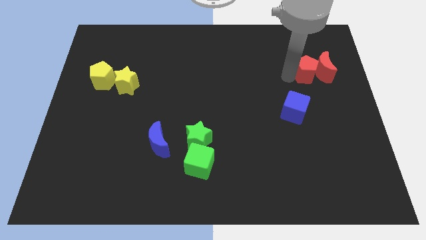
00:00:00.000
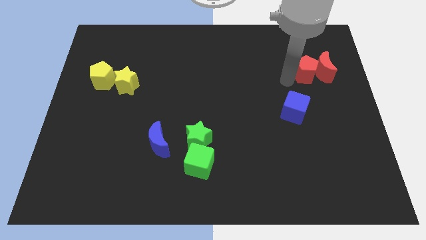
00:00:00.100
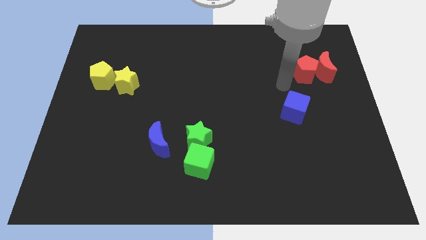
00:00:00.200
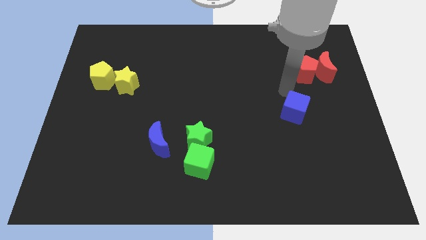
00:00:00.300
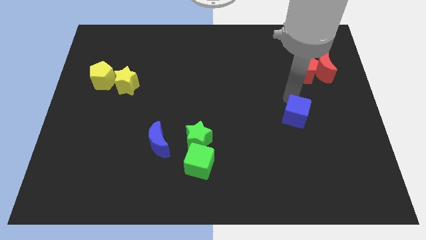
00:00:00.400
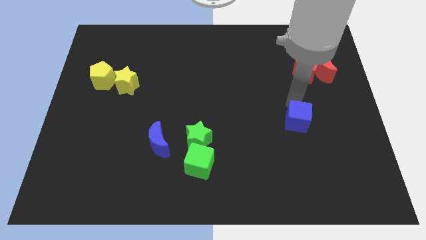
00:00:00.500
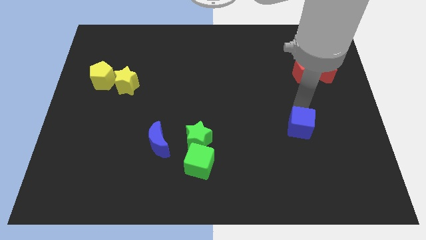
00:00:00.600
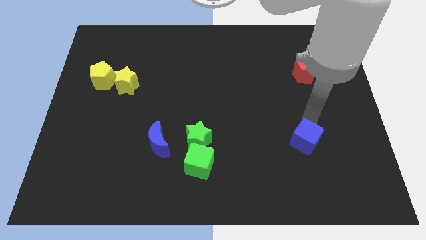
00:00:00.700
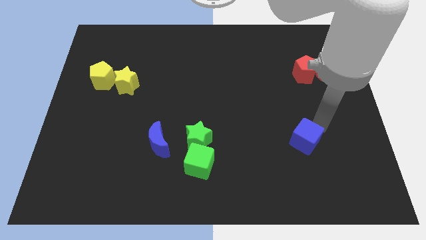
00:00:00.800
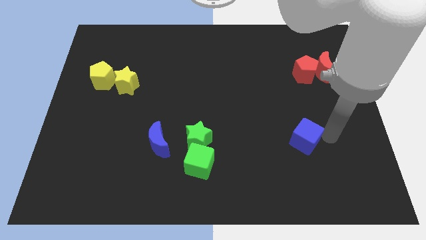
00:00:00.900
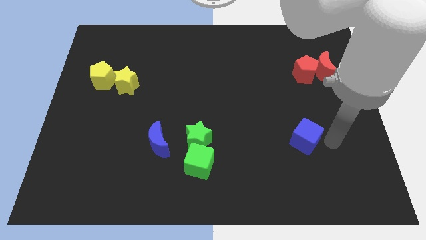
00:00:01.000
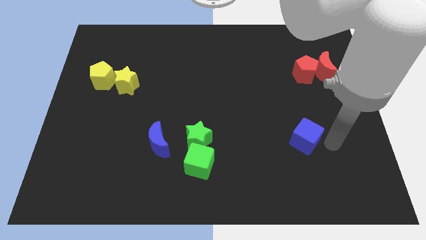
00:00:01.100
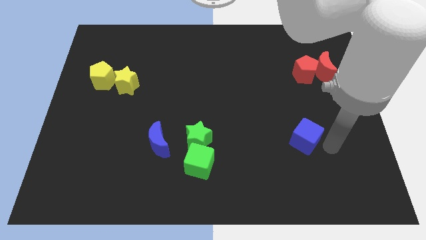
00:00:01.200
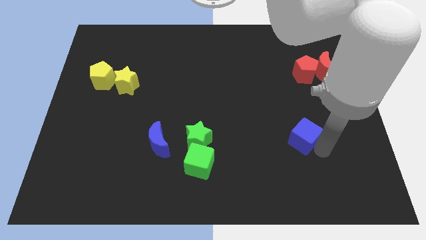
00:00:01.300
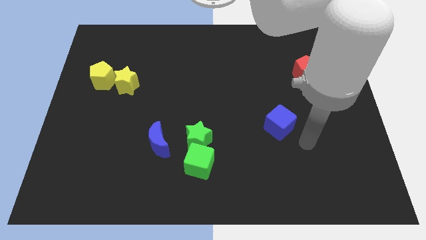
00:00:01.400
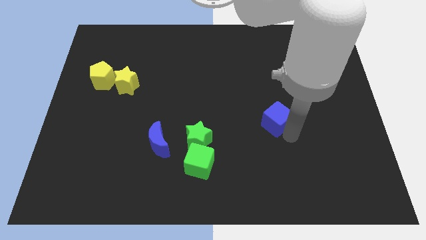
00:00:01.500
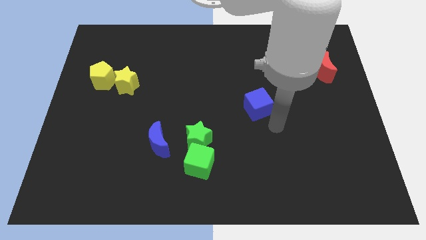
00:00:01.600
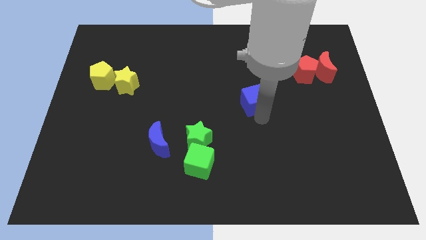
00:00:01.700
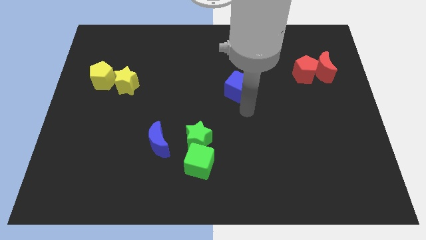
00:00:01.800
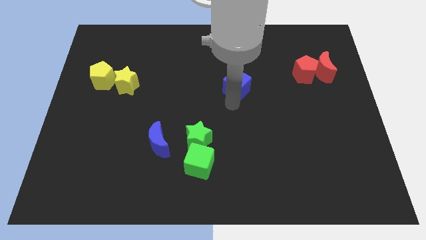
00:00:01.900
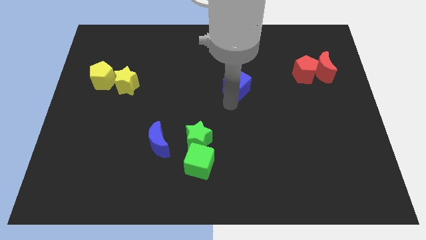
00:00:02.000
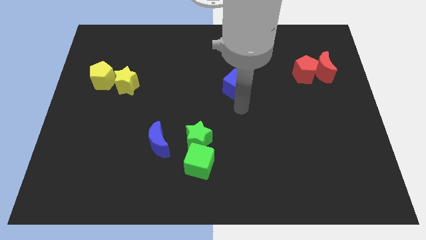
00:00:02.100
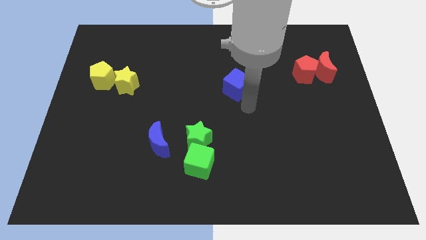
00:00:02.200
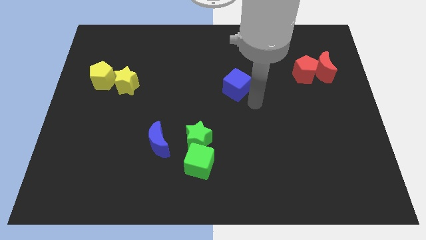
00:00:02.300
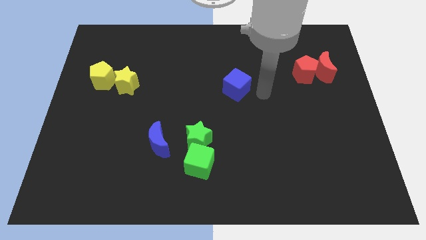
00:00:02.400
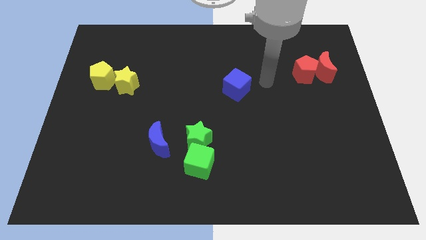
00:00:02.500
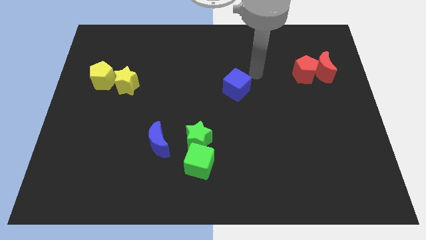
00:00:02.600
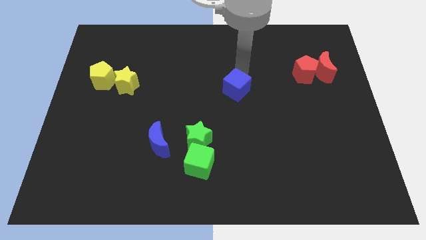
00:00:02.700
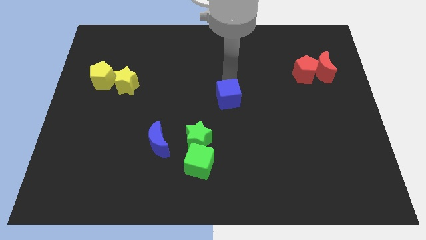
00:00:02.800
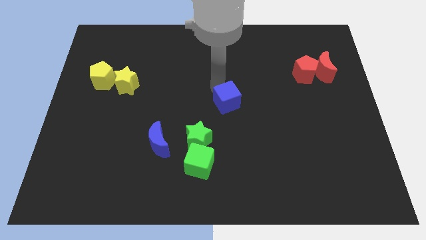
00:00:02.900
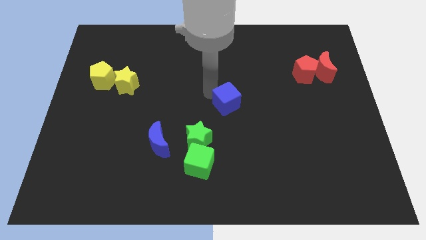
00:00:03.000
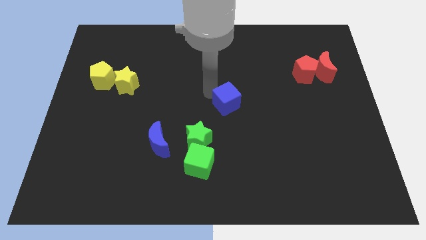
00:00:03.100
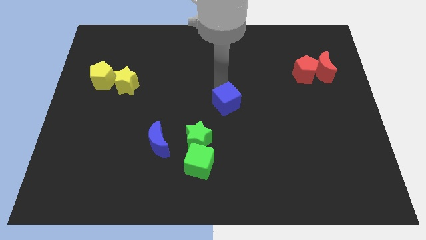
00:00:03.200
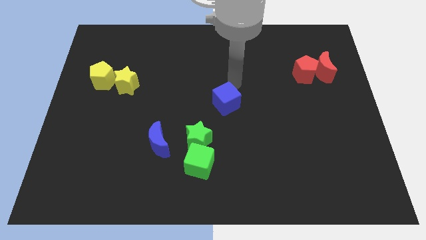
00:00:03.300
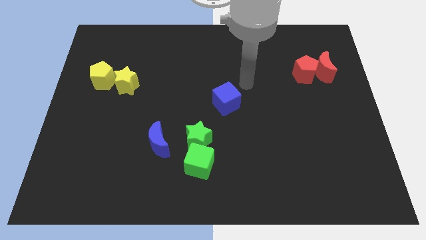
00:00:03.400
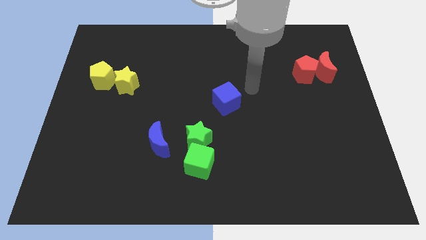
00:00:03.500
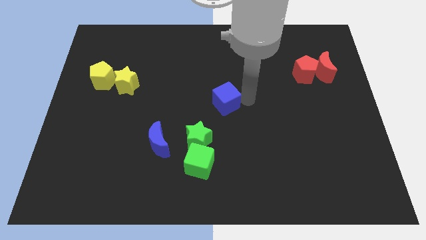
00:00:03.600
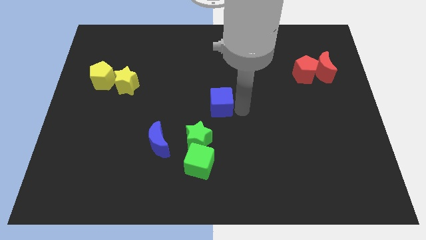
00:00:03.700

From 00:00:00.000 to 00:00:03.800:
move the blue cube to the center of the board

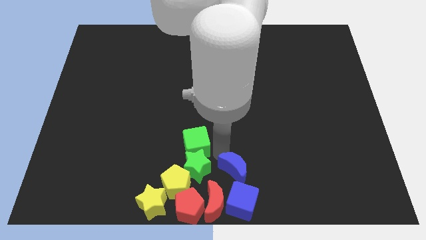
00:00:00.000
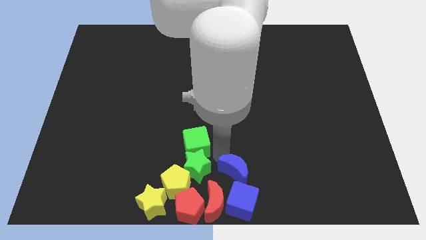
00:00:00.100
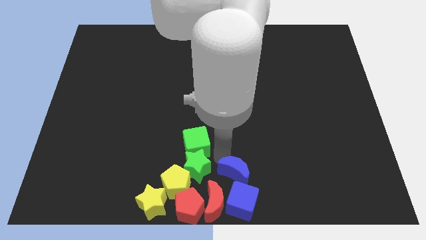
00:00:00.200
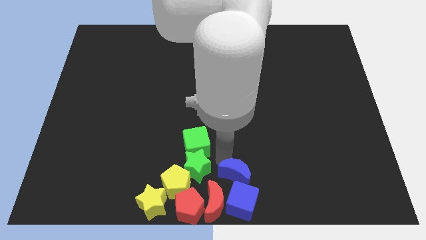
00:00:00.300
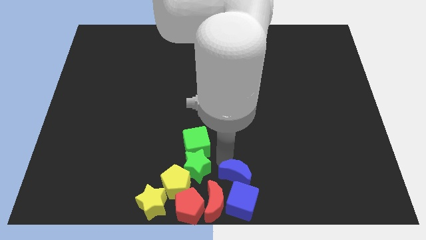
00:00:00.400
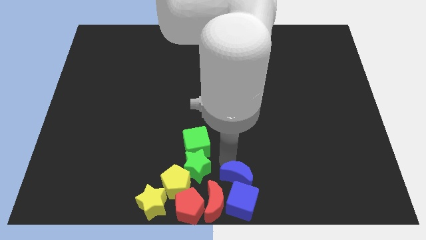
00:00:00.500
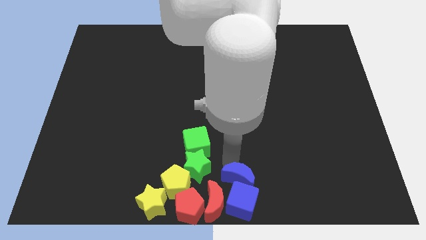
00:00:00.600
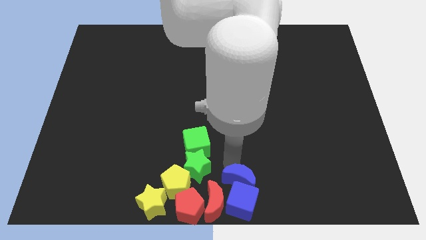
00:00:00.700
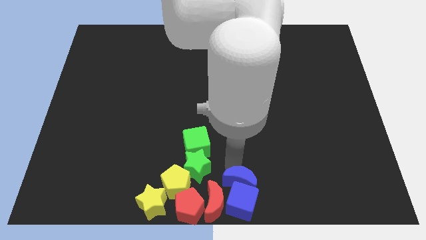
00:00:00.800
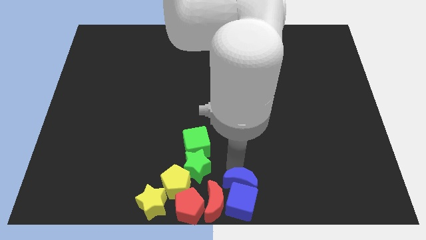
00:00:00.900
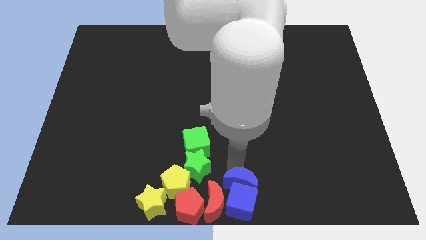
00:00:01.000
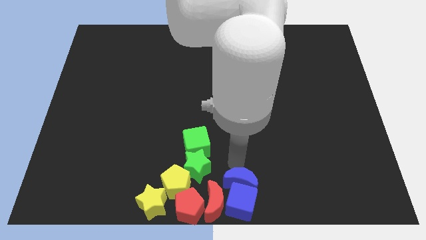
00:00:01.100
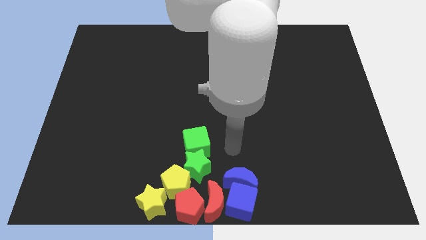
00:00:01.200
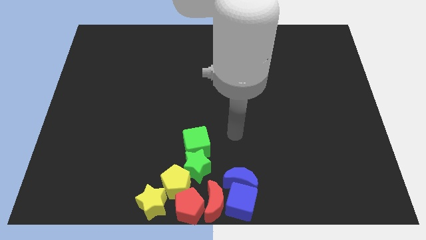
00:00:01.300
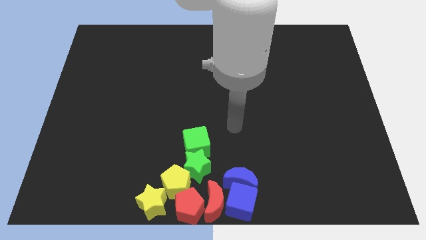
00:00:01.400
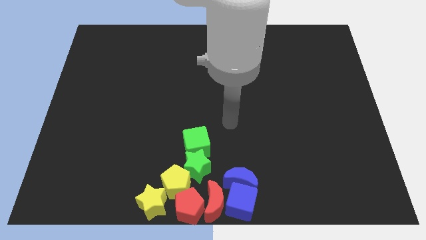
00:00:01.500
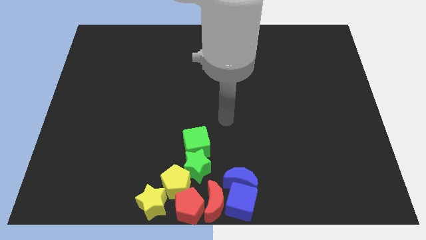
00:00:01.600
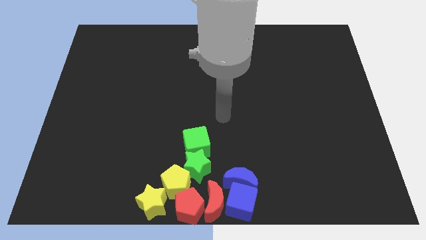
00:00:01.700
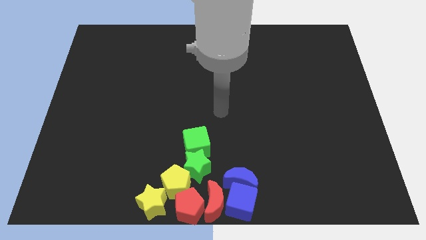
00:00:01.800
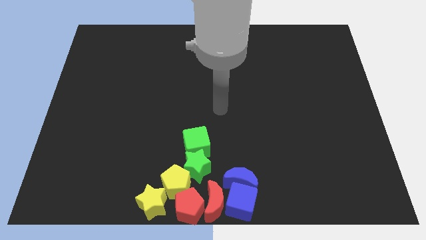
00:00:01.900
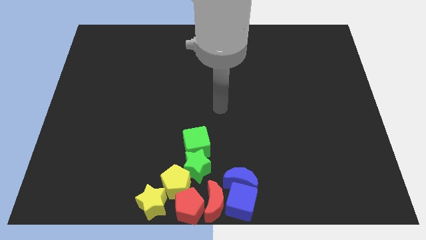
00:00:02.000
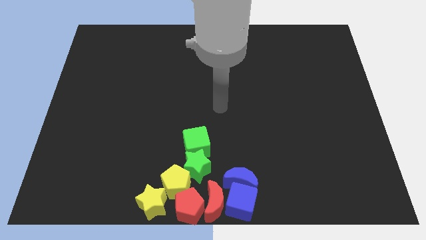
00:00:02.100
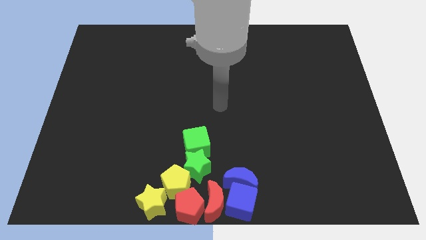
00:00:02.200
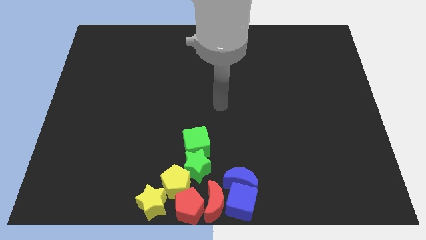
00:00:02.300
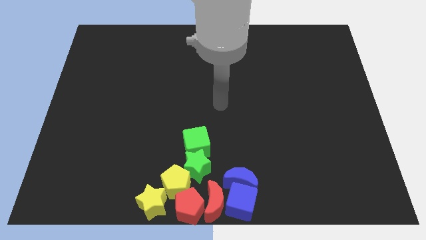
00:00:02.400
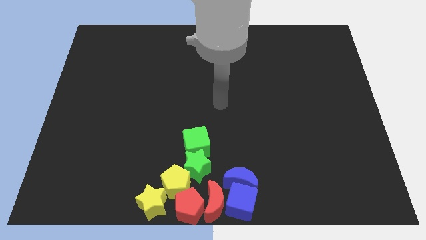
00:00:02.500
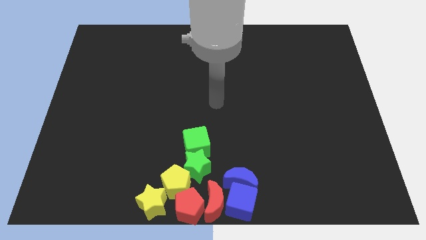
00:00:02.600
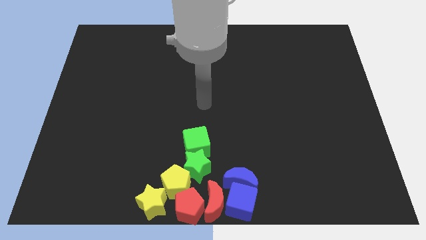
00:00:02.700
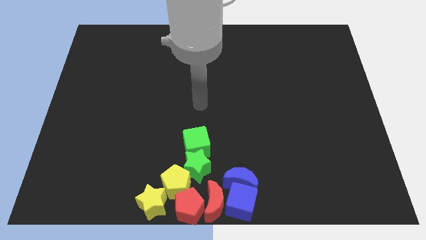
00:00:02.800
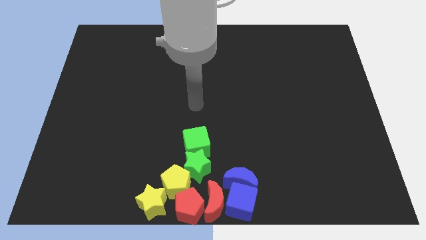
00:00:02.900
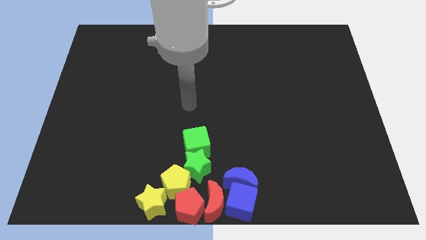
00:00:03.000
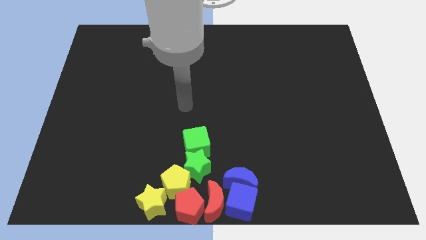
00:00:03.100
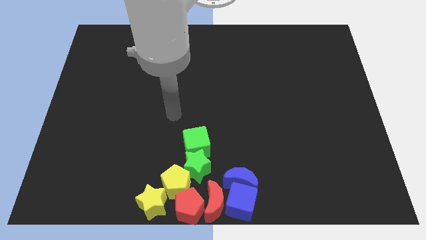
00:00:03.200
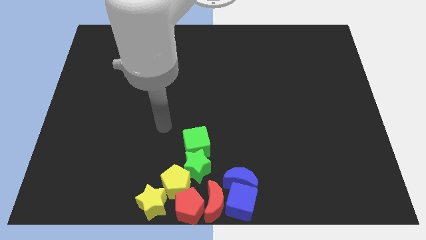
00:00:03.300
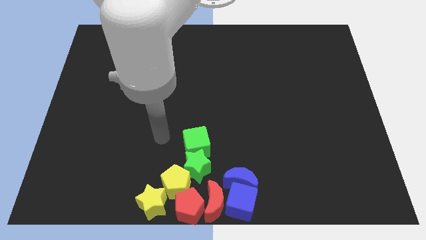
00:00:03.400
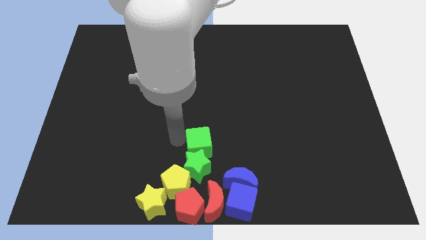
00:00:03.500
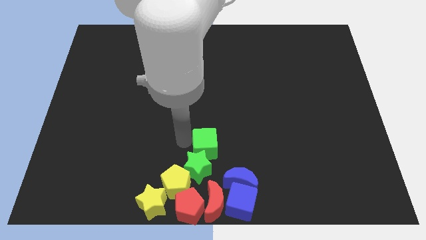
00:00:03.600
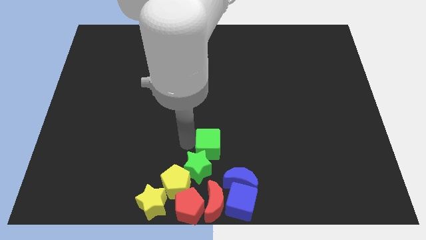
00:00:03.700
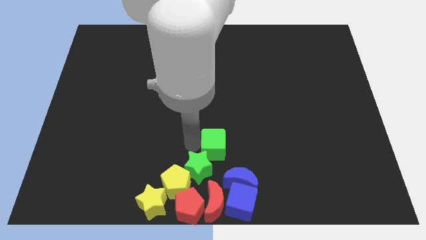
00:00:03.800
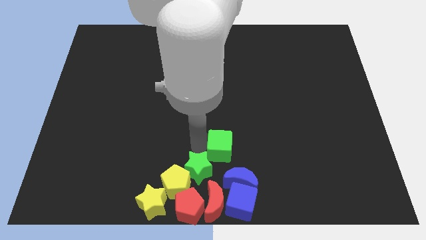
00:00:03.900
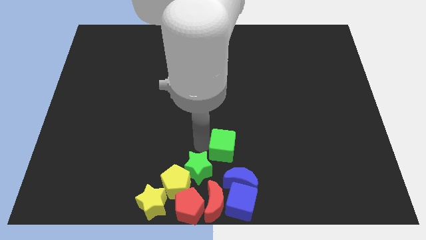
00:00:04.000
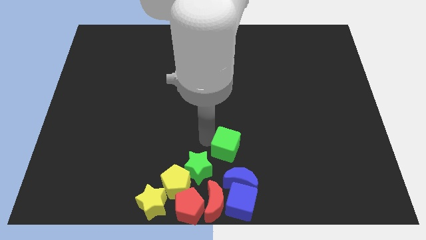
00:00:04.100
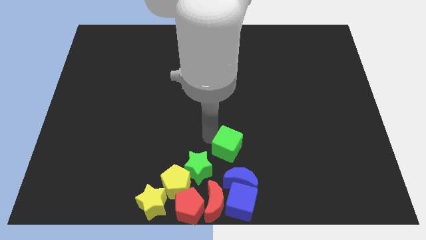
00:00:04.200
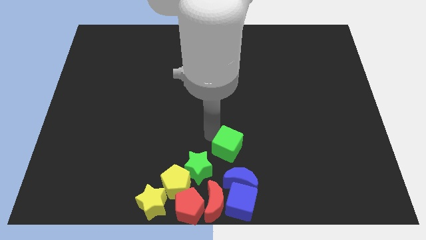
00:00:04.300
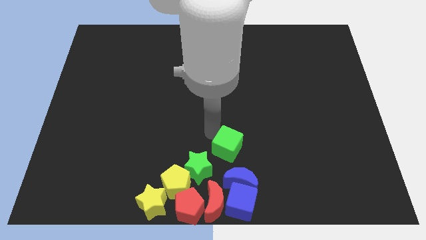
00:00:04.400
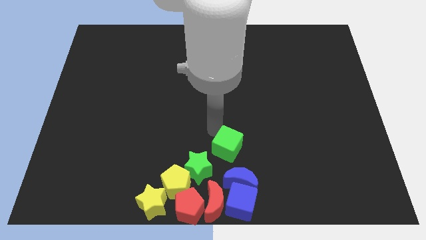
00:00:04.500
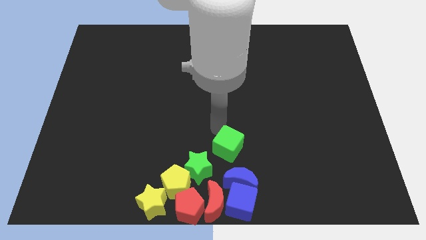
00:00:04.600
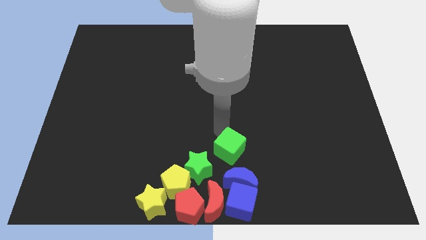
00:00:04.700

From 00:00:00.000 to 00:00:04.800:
move the green cube slightly right

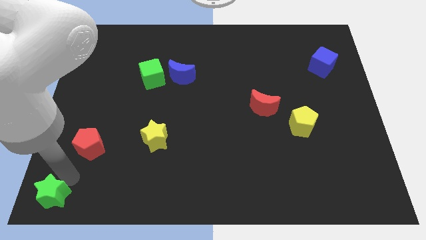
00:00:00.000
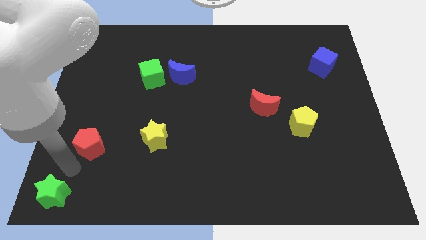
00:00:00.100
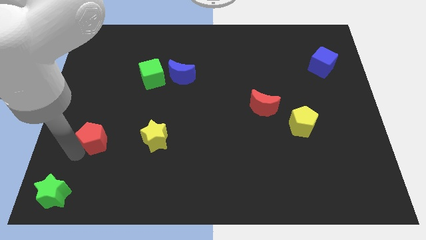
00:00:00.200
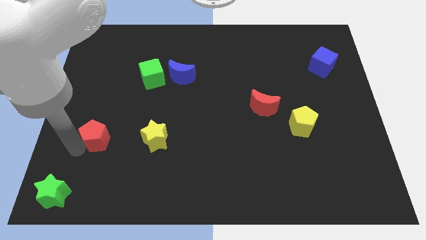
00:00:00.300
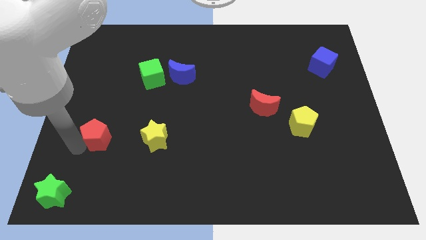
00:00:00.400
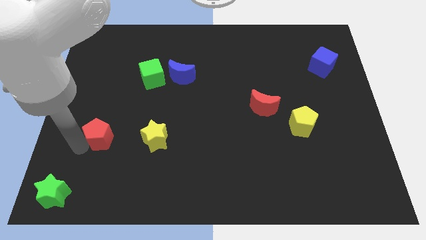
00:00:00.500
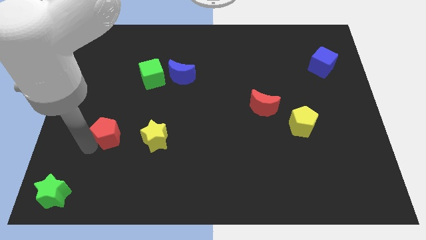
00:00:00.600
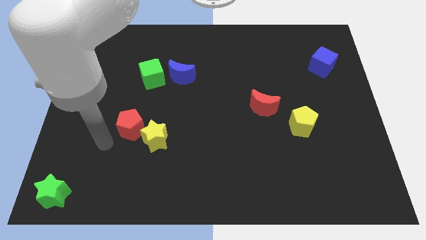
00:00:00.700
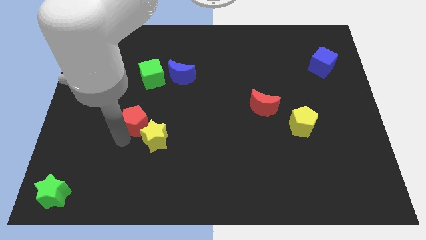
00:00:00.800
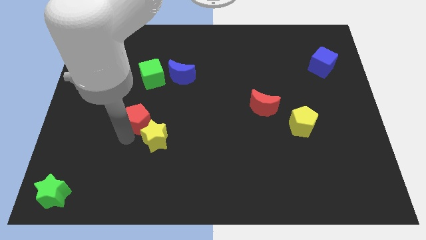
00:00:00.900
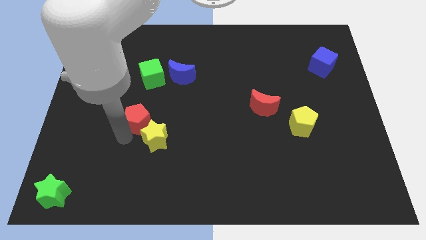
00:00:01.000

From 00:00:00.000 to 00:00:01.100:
place the red pentagon at the top left side of yellow star
